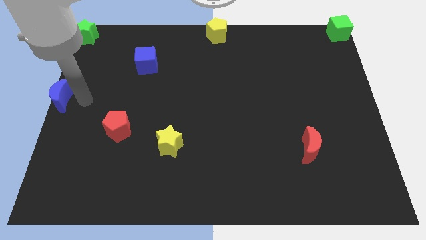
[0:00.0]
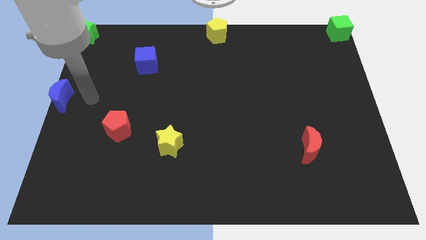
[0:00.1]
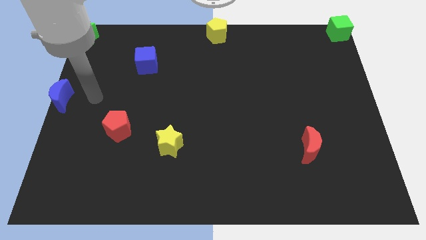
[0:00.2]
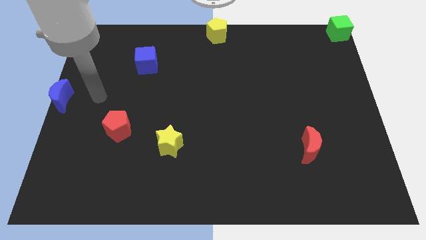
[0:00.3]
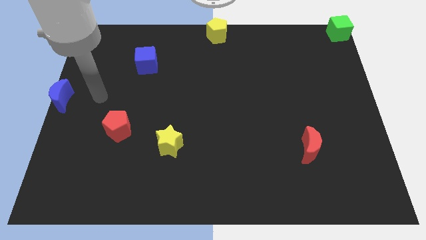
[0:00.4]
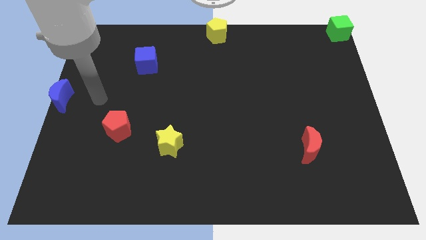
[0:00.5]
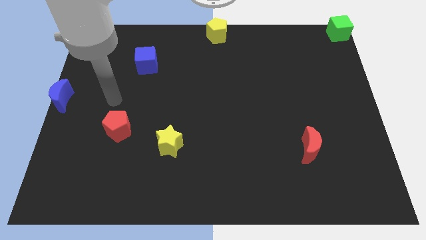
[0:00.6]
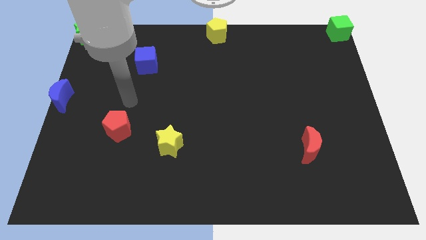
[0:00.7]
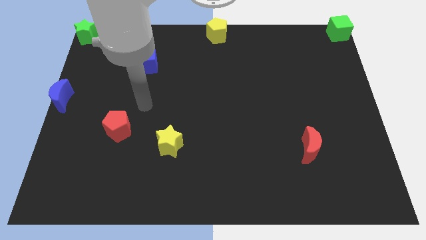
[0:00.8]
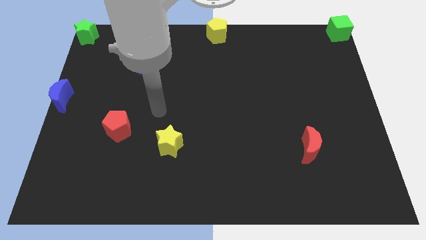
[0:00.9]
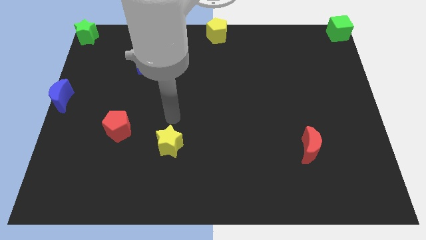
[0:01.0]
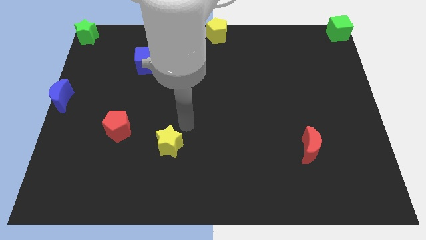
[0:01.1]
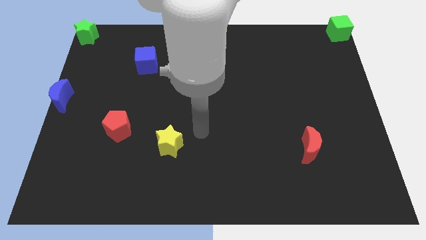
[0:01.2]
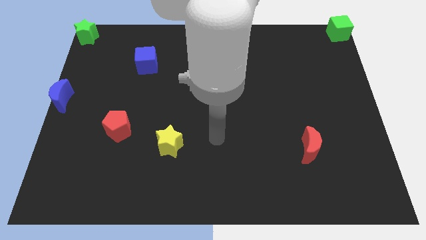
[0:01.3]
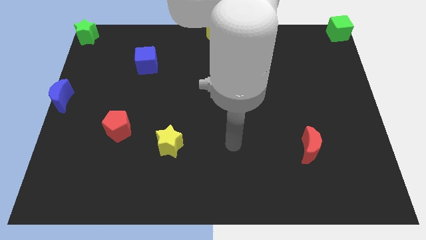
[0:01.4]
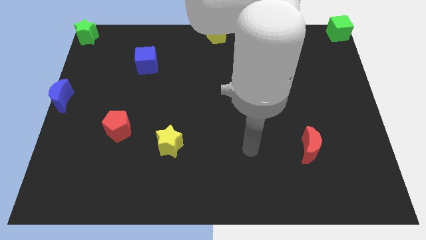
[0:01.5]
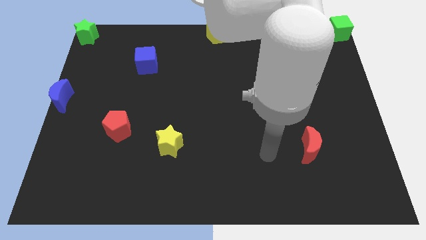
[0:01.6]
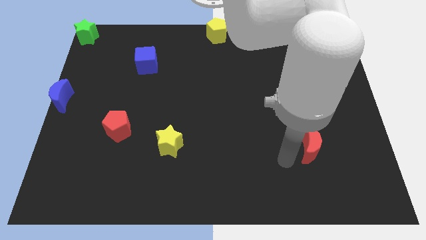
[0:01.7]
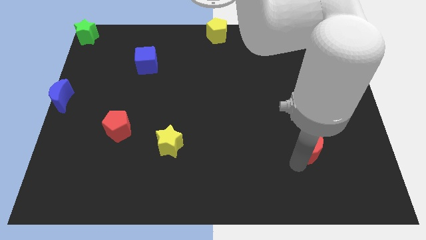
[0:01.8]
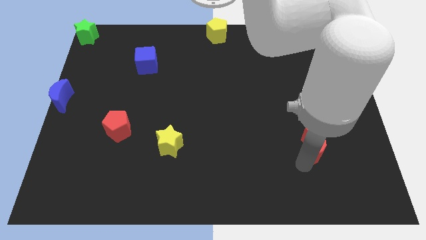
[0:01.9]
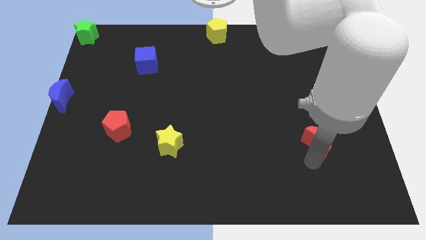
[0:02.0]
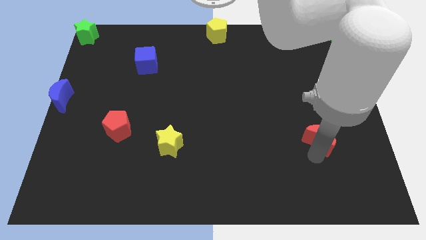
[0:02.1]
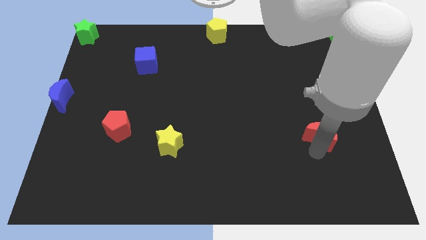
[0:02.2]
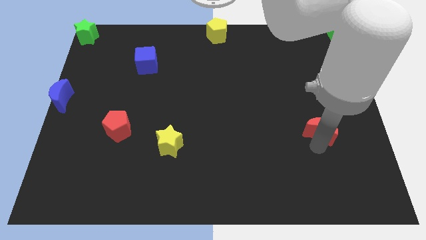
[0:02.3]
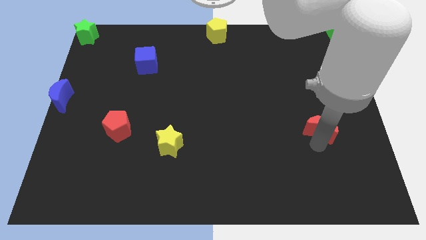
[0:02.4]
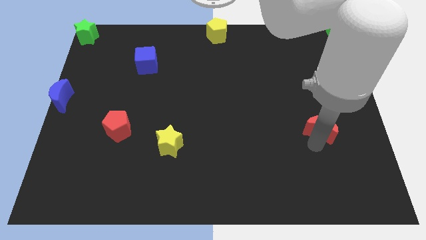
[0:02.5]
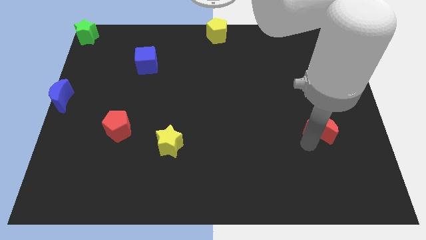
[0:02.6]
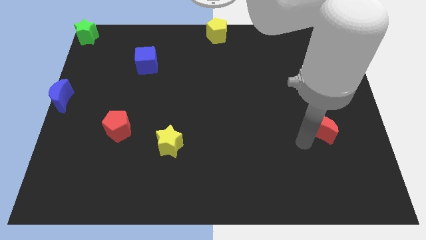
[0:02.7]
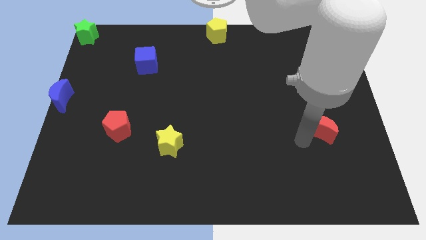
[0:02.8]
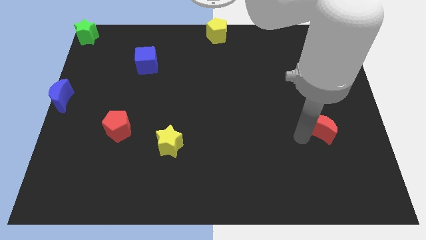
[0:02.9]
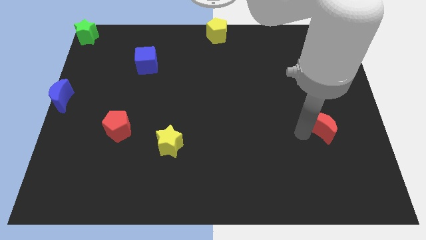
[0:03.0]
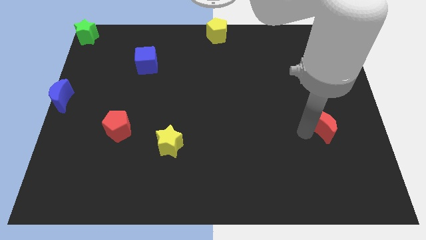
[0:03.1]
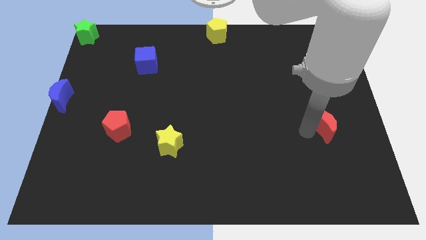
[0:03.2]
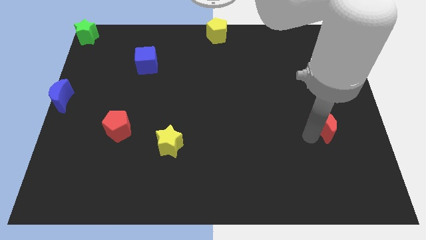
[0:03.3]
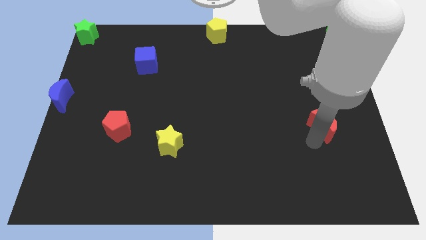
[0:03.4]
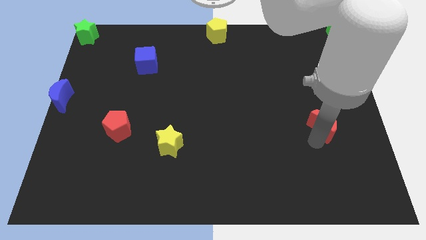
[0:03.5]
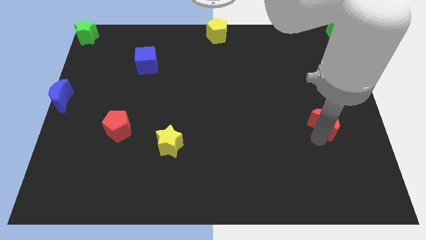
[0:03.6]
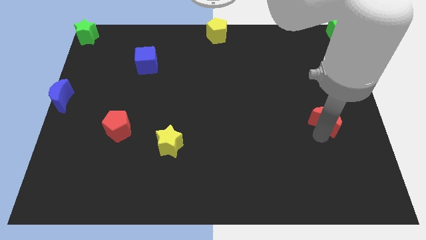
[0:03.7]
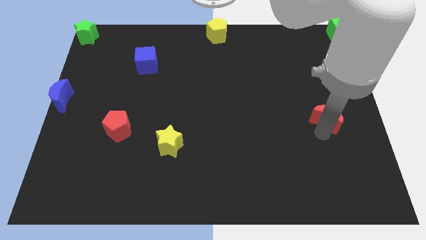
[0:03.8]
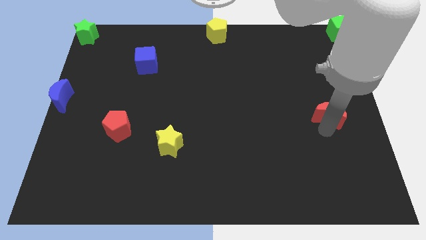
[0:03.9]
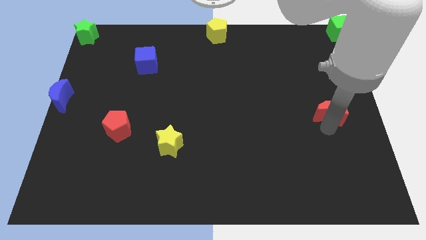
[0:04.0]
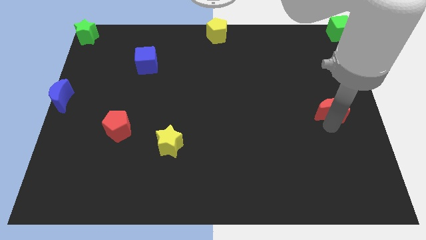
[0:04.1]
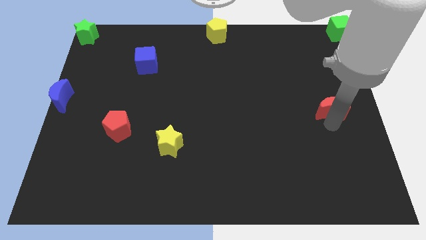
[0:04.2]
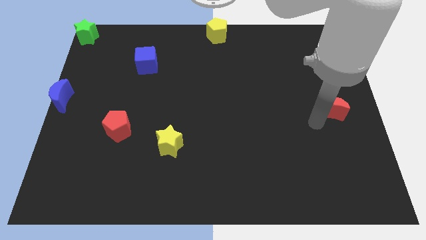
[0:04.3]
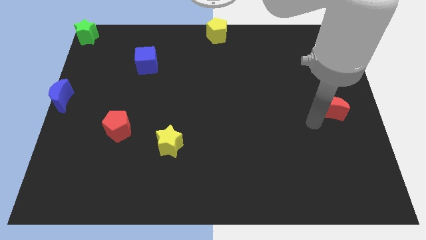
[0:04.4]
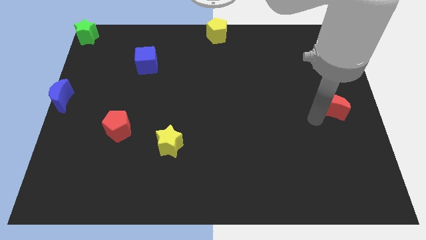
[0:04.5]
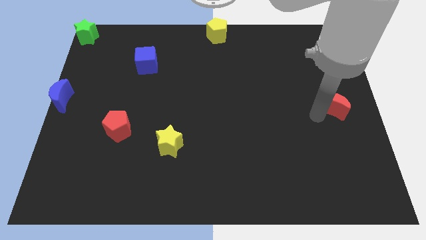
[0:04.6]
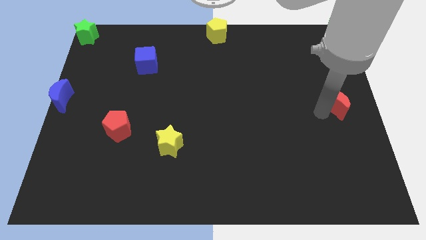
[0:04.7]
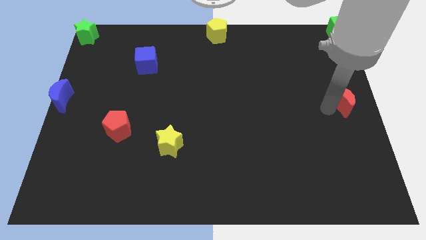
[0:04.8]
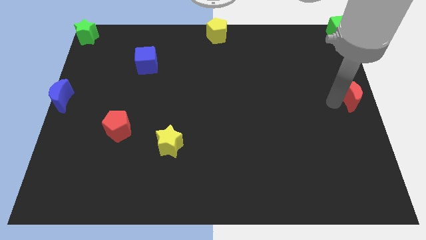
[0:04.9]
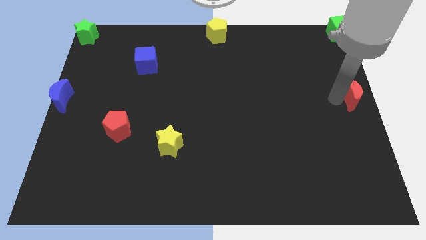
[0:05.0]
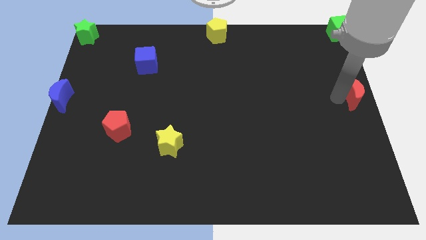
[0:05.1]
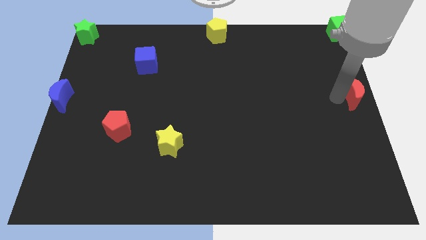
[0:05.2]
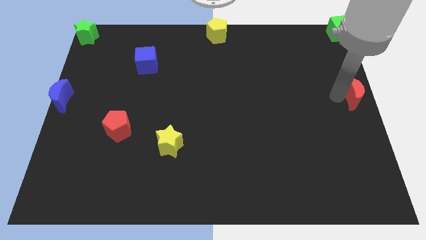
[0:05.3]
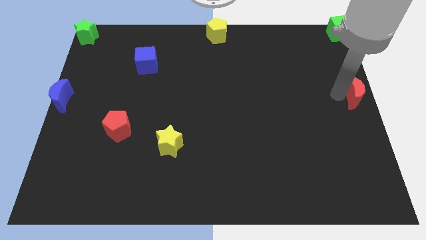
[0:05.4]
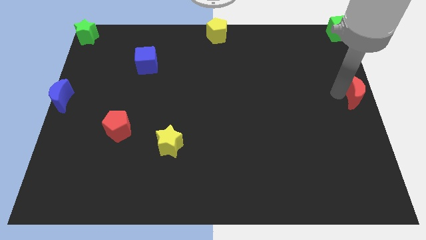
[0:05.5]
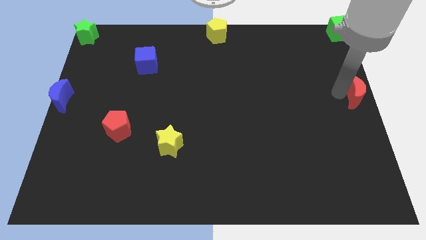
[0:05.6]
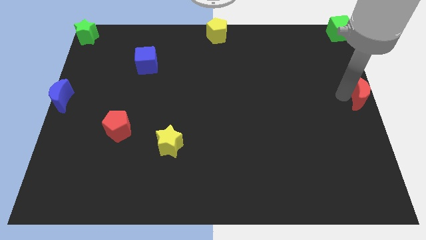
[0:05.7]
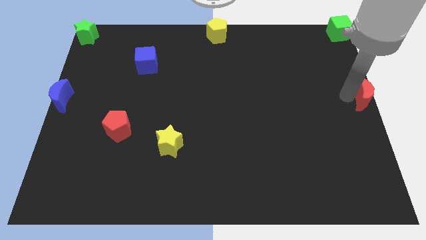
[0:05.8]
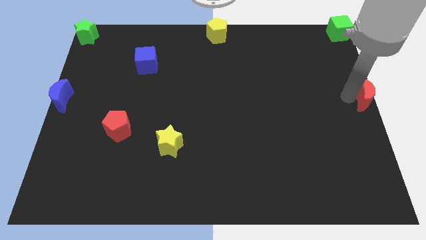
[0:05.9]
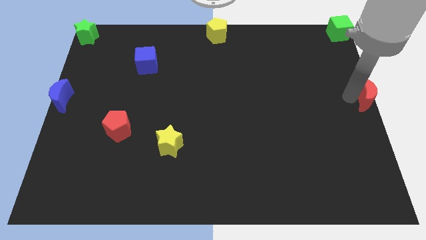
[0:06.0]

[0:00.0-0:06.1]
move the red crescent to the center right of the board

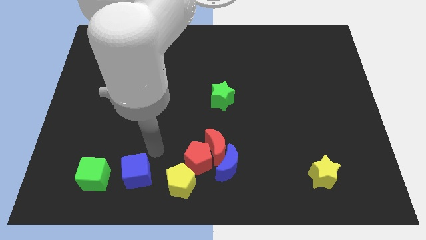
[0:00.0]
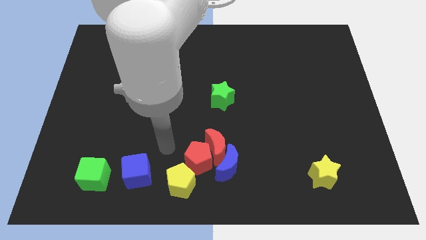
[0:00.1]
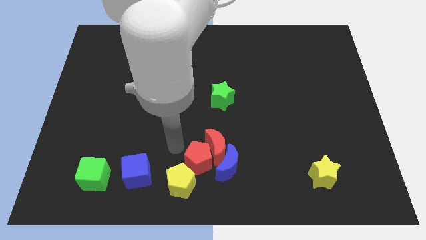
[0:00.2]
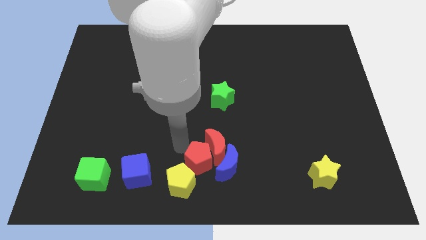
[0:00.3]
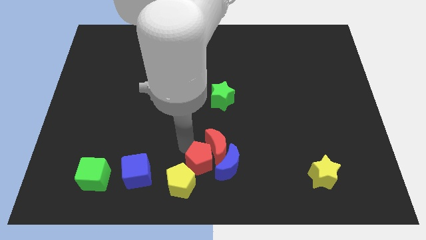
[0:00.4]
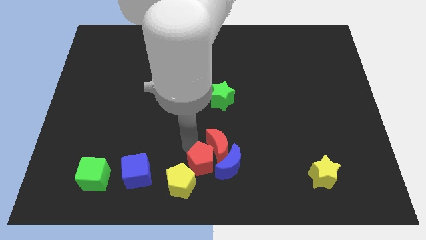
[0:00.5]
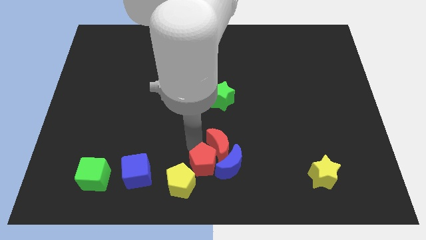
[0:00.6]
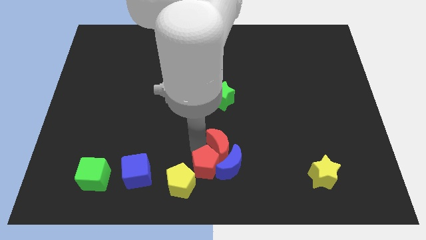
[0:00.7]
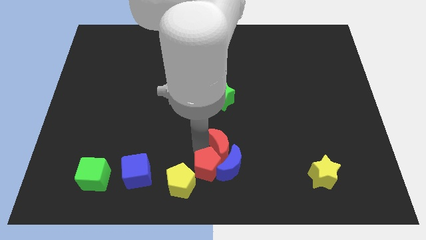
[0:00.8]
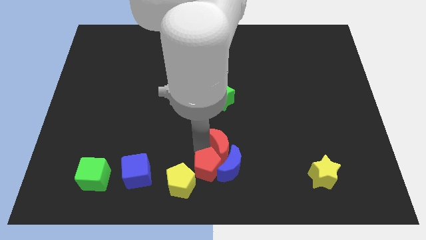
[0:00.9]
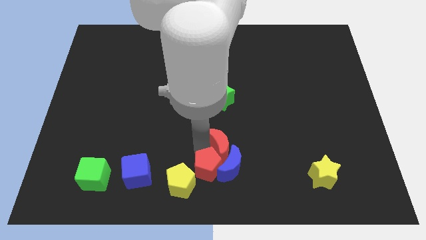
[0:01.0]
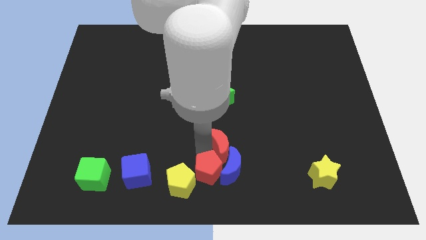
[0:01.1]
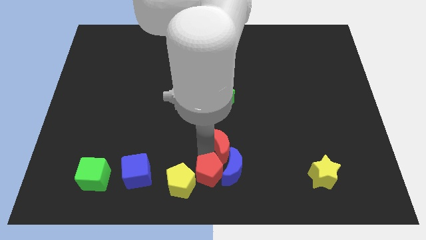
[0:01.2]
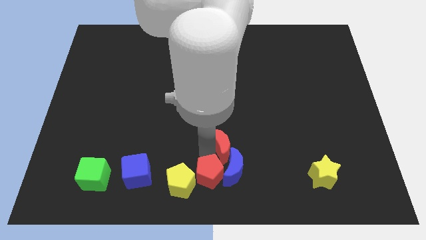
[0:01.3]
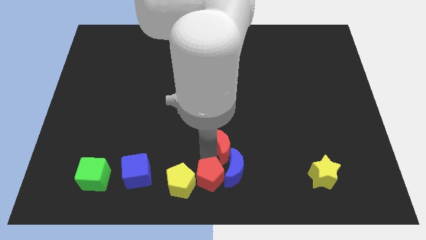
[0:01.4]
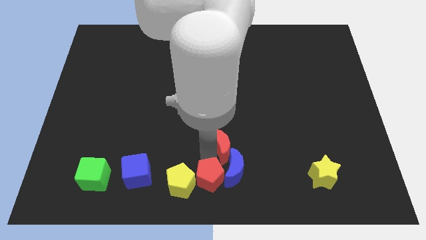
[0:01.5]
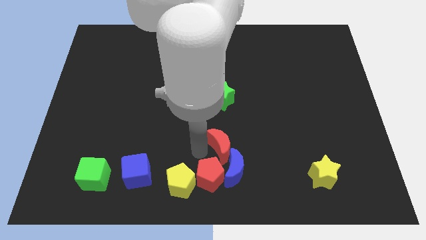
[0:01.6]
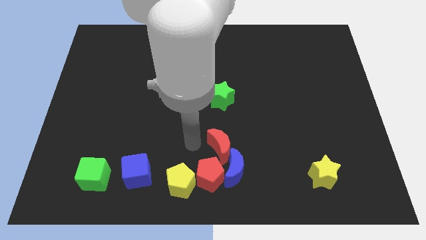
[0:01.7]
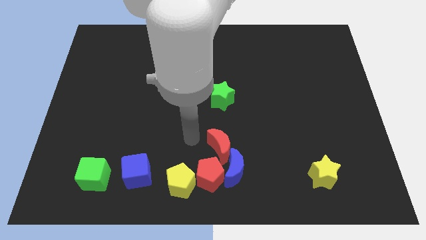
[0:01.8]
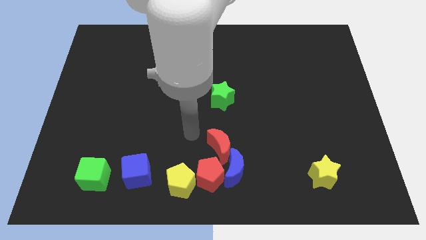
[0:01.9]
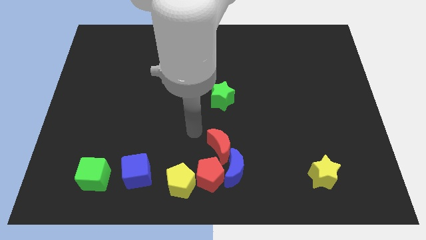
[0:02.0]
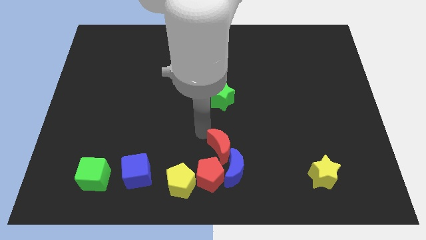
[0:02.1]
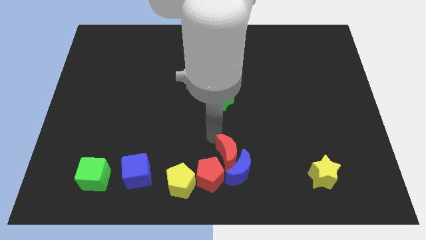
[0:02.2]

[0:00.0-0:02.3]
move the red pentagon down slightly

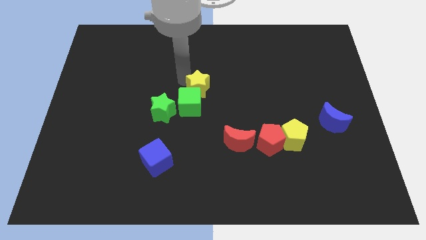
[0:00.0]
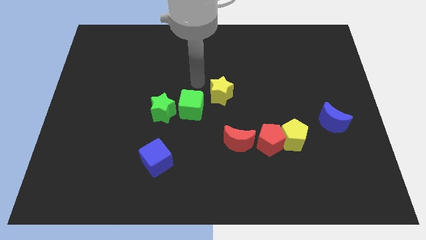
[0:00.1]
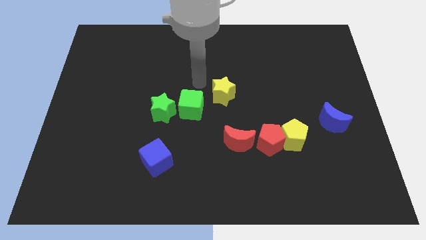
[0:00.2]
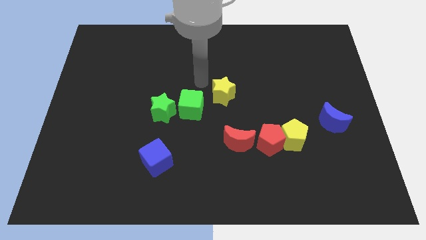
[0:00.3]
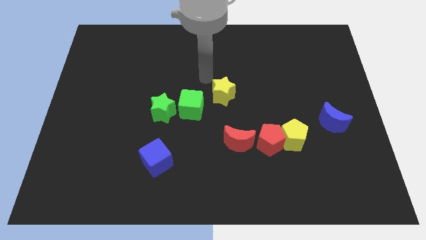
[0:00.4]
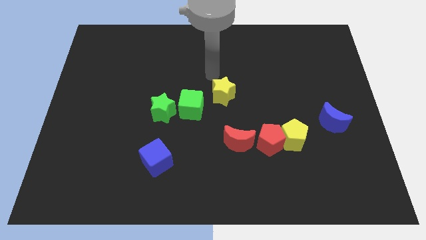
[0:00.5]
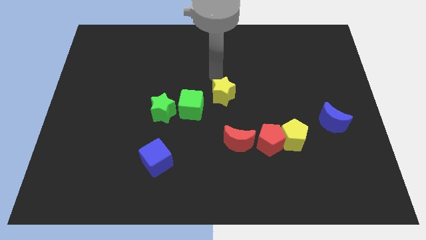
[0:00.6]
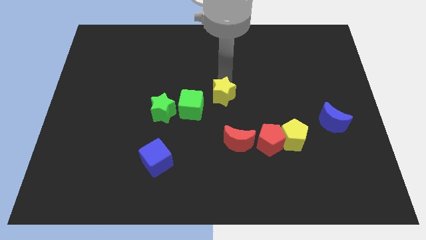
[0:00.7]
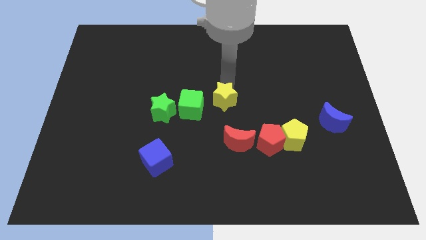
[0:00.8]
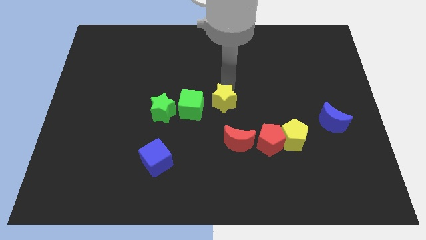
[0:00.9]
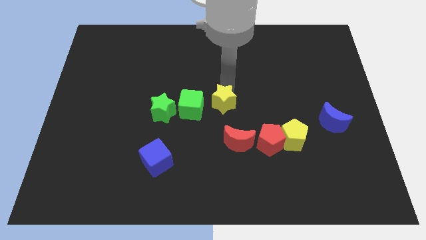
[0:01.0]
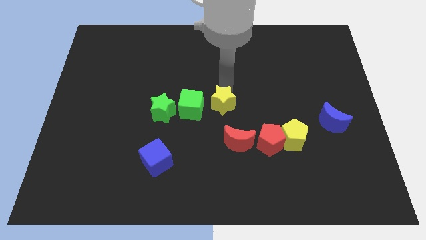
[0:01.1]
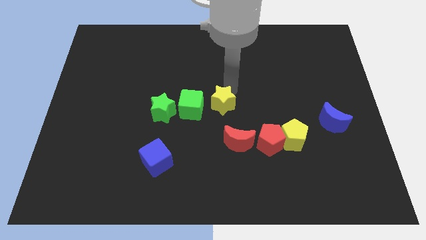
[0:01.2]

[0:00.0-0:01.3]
place the yellow star at the center of the board
